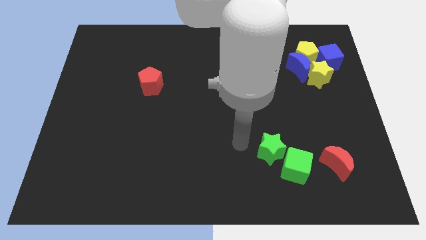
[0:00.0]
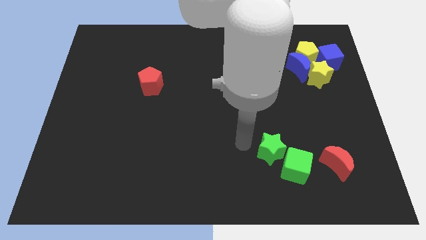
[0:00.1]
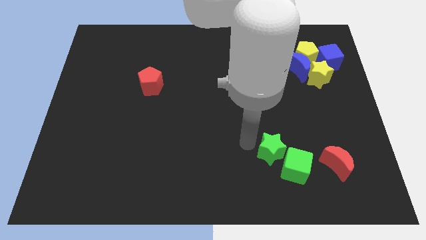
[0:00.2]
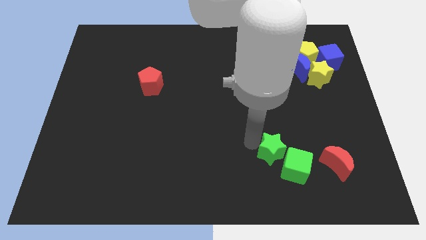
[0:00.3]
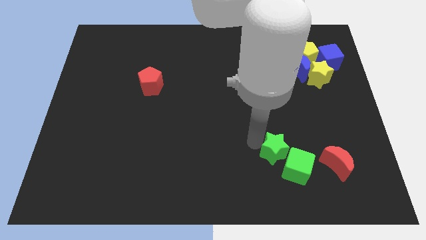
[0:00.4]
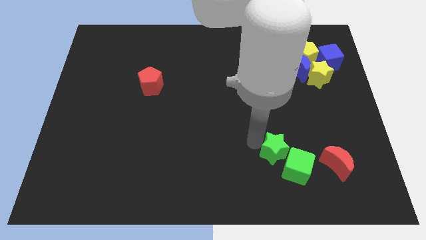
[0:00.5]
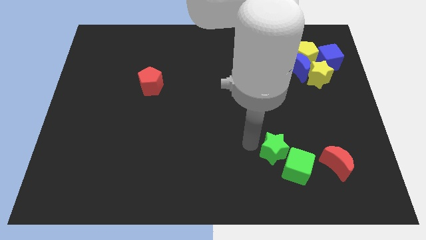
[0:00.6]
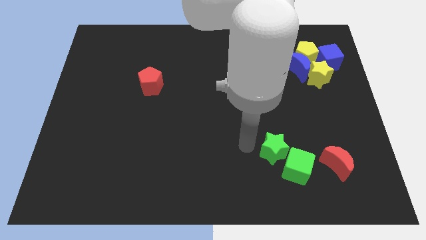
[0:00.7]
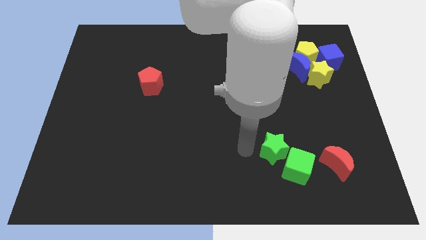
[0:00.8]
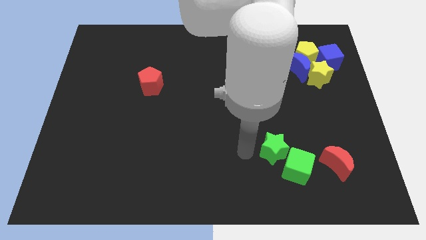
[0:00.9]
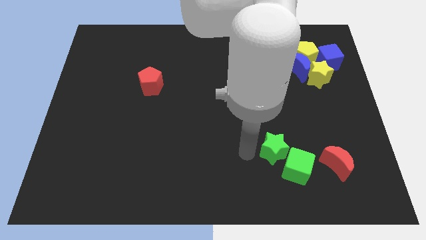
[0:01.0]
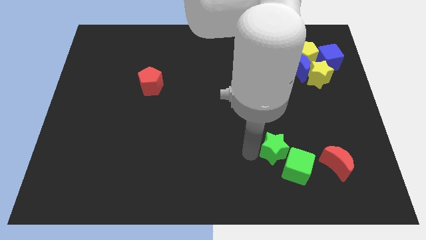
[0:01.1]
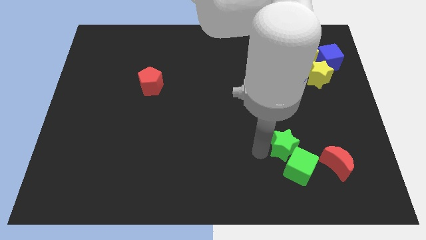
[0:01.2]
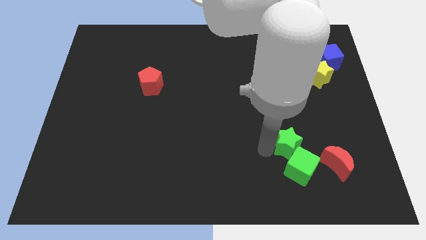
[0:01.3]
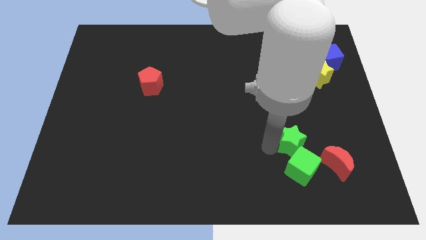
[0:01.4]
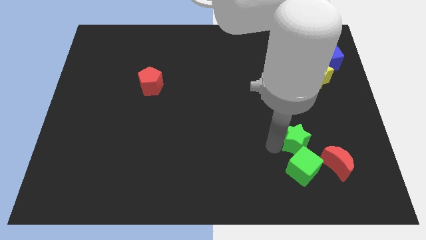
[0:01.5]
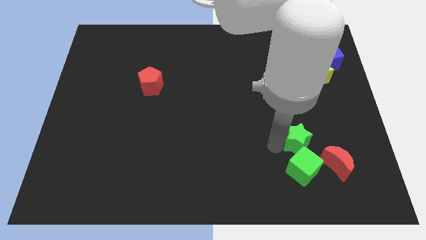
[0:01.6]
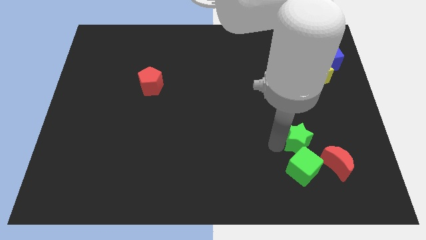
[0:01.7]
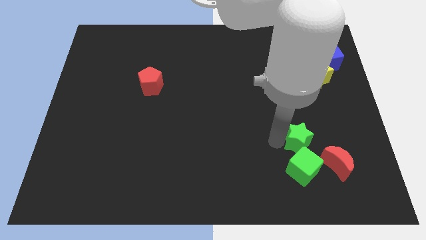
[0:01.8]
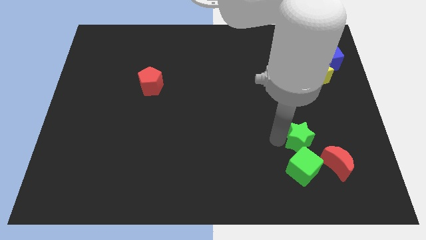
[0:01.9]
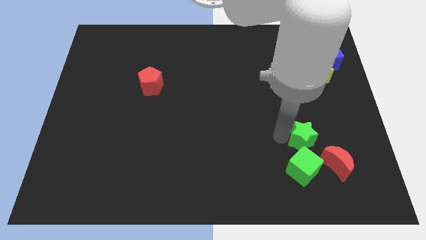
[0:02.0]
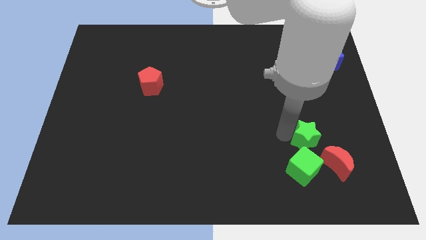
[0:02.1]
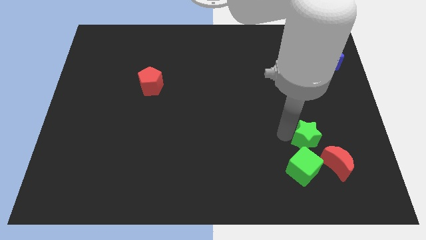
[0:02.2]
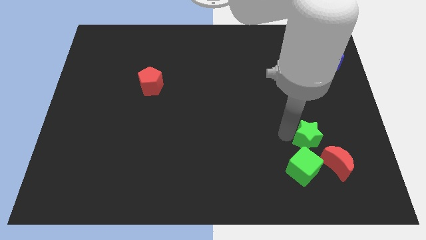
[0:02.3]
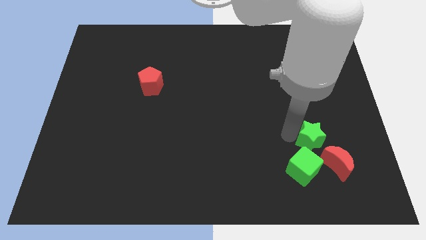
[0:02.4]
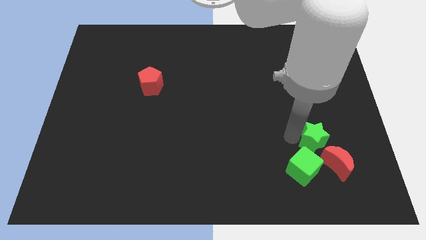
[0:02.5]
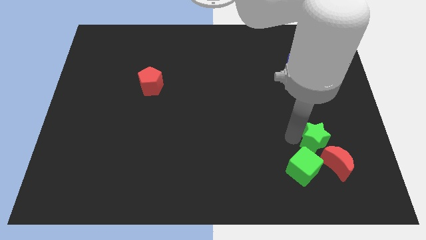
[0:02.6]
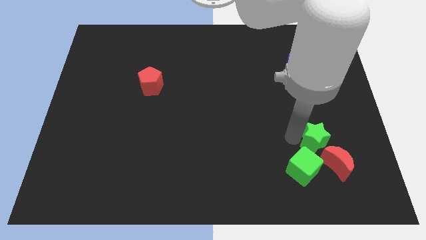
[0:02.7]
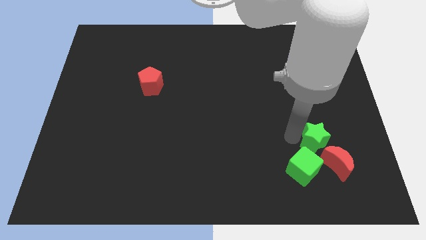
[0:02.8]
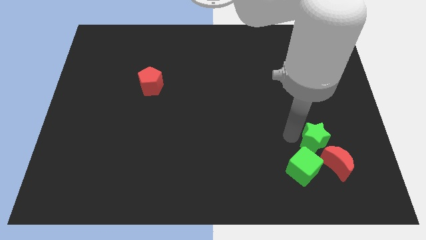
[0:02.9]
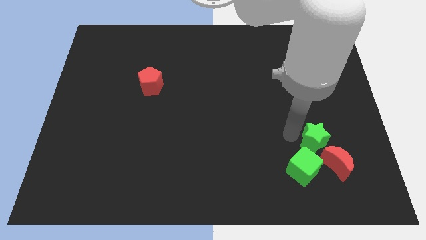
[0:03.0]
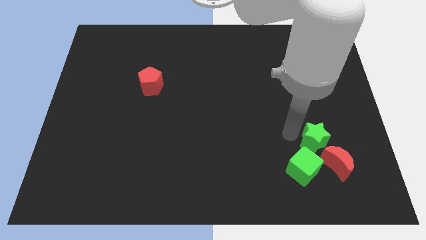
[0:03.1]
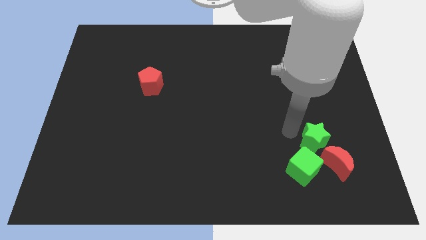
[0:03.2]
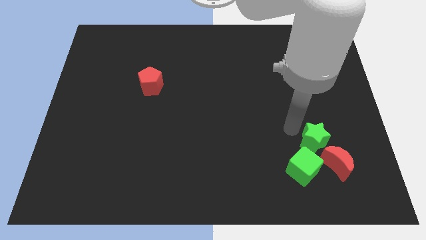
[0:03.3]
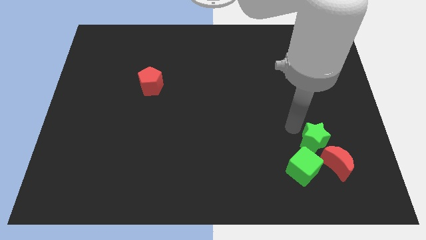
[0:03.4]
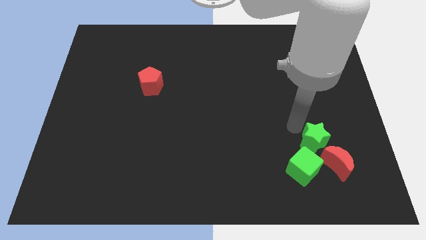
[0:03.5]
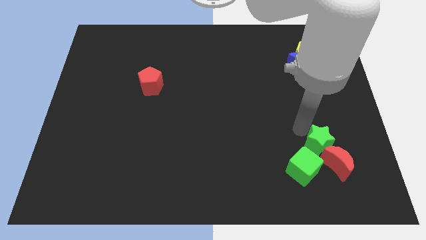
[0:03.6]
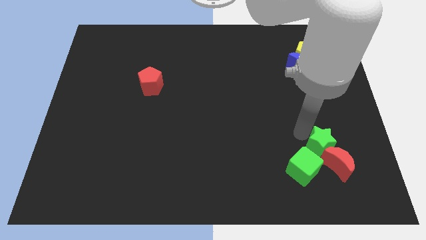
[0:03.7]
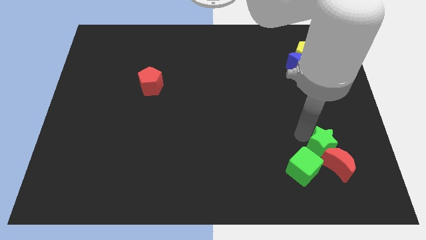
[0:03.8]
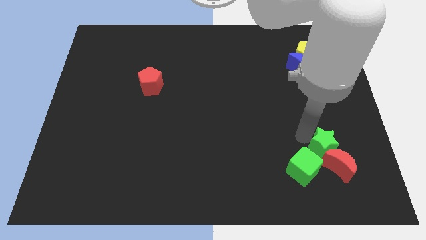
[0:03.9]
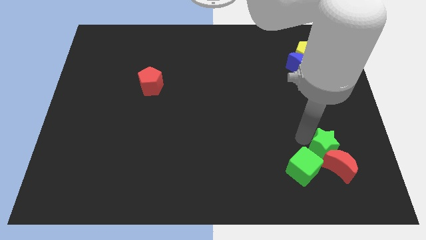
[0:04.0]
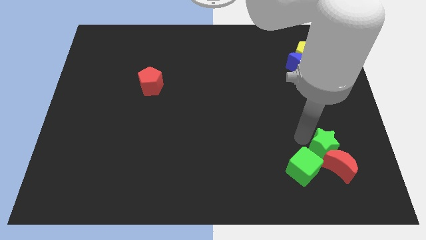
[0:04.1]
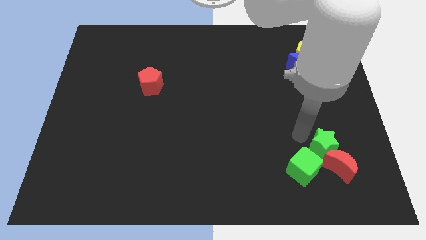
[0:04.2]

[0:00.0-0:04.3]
move the green star to the top of the red crescent

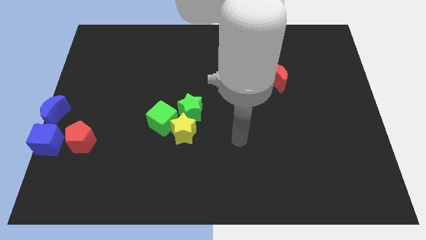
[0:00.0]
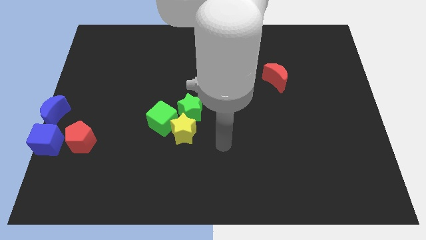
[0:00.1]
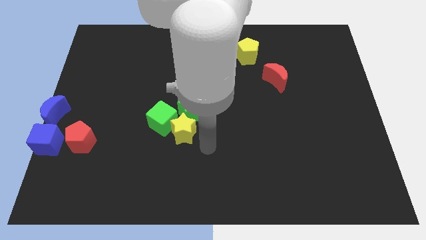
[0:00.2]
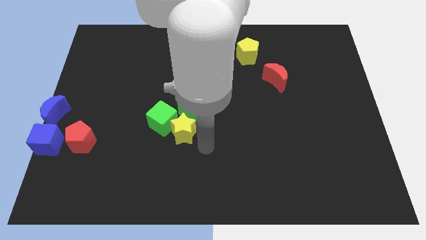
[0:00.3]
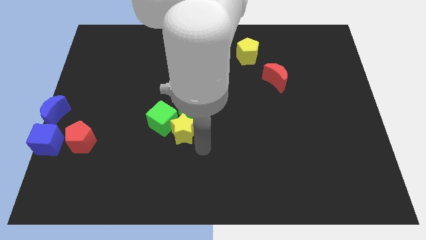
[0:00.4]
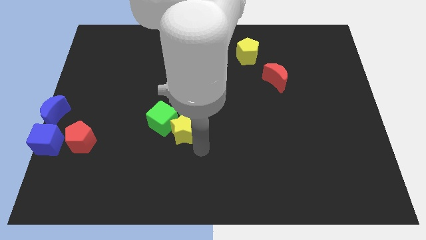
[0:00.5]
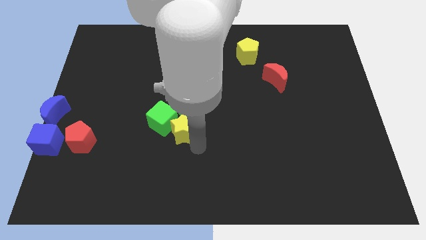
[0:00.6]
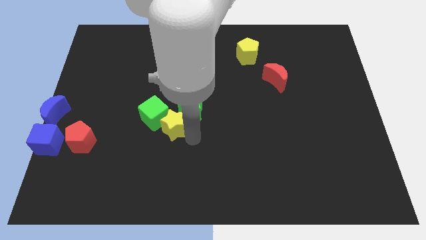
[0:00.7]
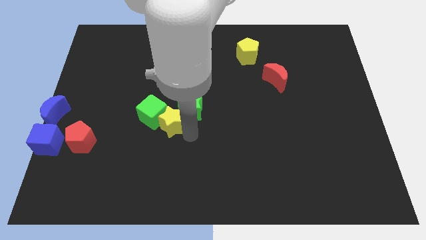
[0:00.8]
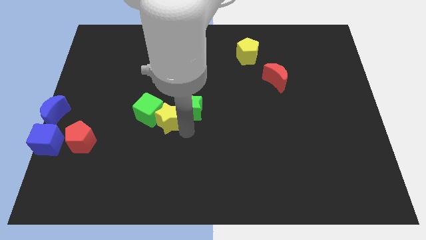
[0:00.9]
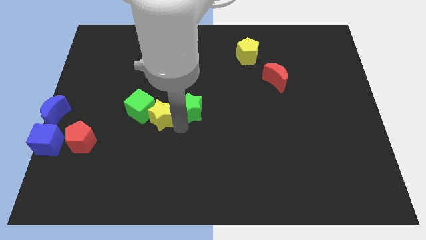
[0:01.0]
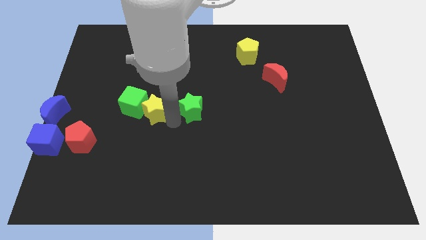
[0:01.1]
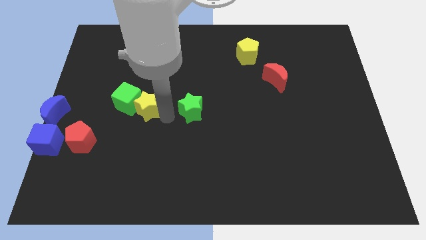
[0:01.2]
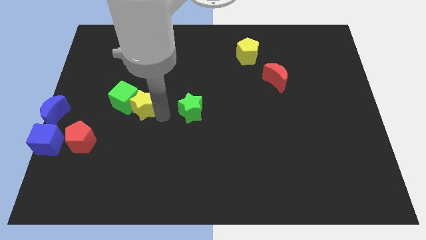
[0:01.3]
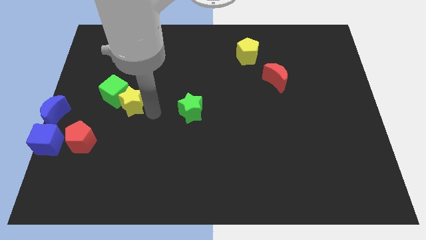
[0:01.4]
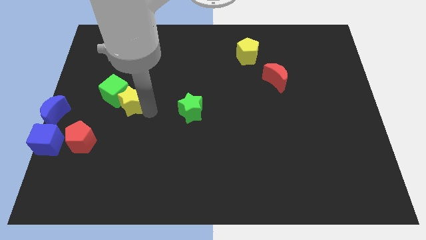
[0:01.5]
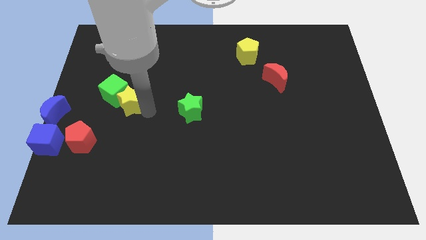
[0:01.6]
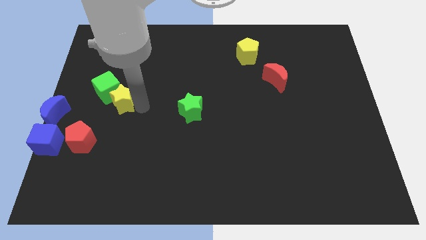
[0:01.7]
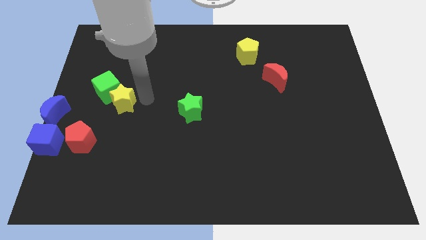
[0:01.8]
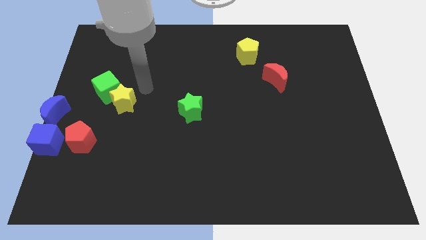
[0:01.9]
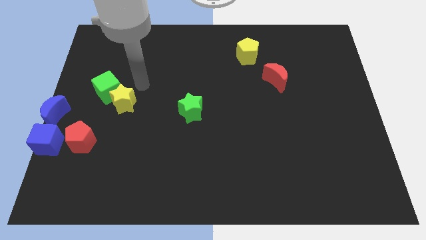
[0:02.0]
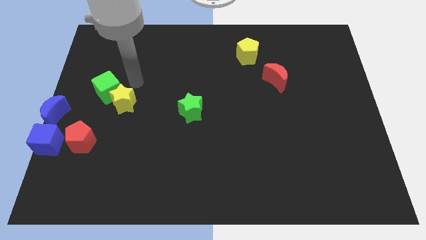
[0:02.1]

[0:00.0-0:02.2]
move the yellow star and the green cube away from the green star

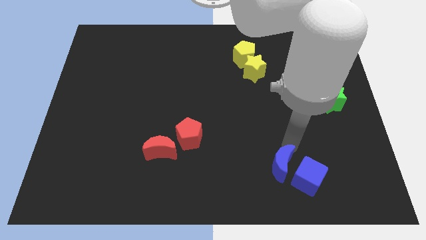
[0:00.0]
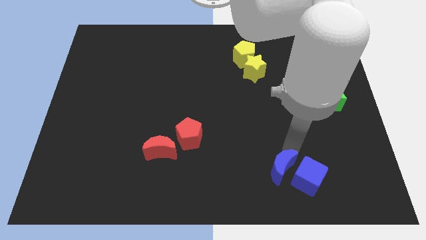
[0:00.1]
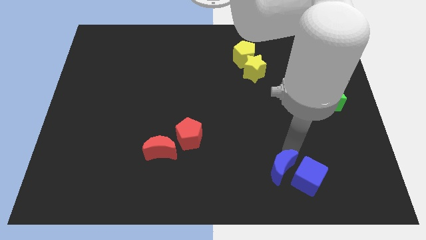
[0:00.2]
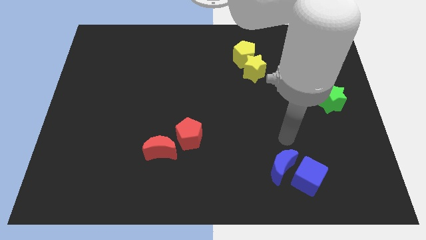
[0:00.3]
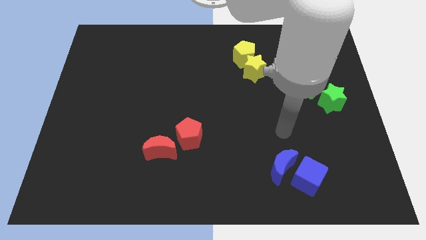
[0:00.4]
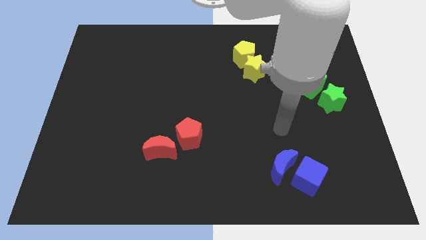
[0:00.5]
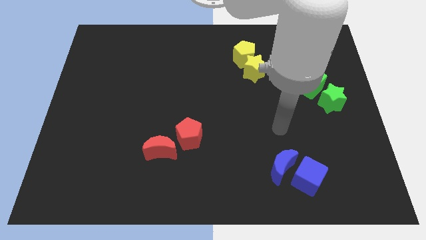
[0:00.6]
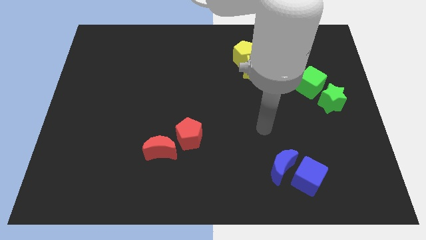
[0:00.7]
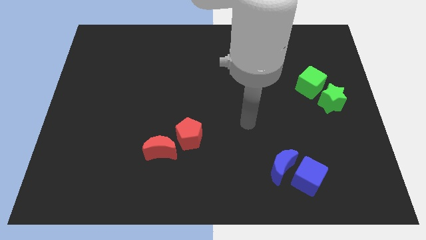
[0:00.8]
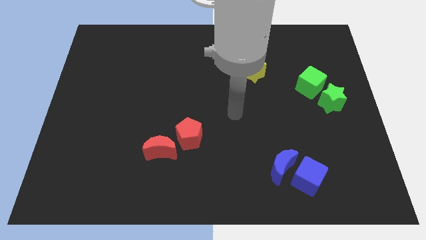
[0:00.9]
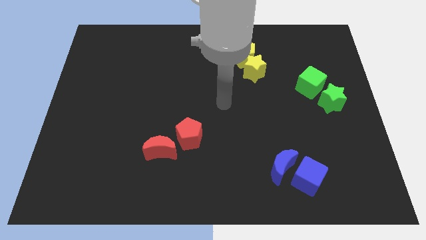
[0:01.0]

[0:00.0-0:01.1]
drag the pointer towards the center of the board

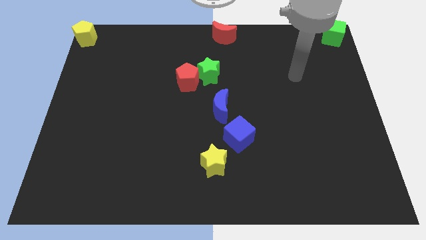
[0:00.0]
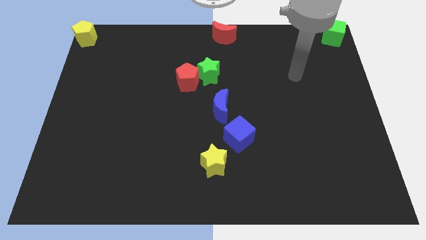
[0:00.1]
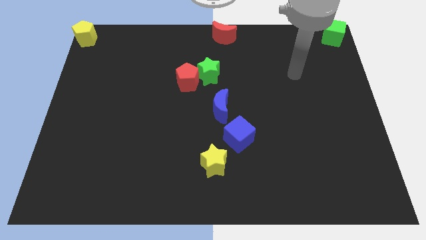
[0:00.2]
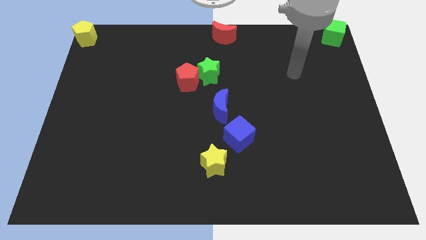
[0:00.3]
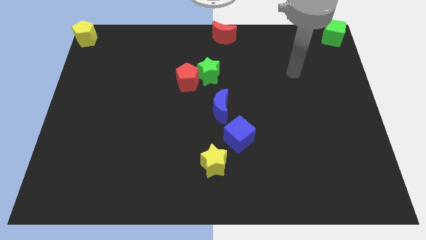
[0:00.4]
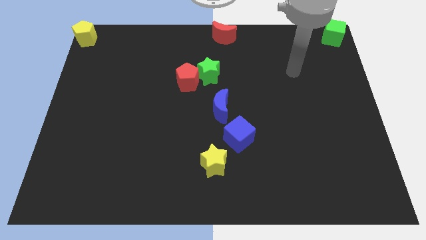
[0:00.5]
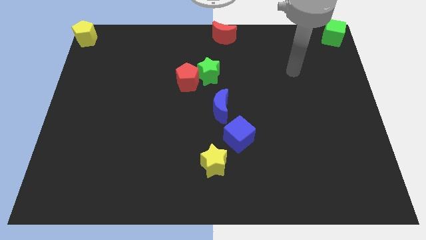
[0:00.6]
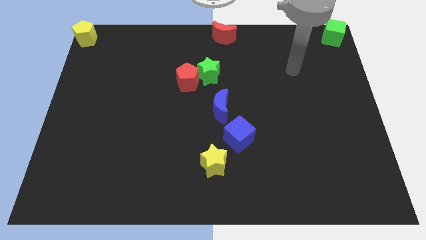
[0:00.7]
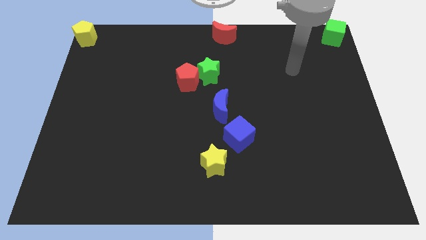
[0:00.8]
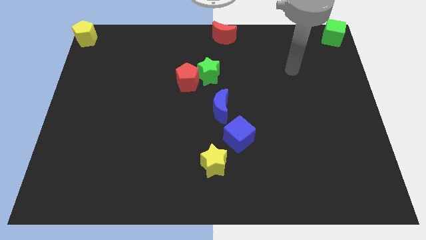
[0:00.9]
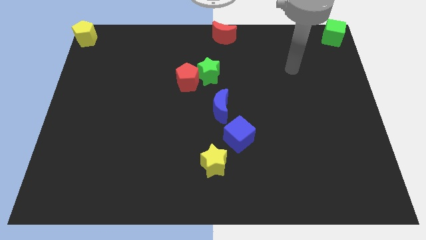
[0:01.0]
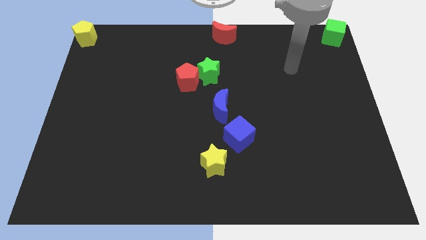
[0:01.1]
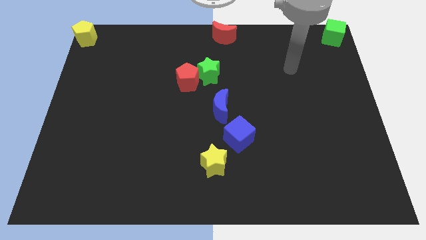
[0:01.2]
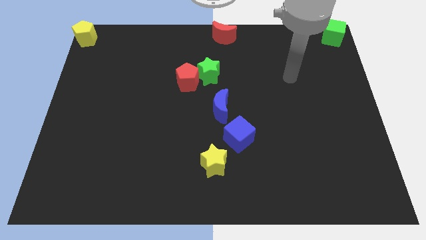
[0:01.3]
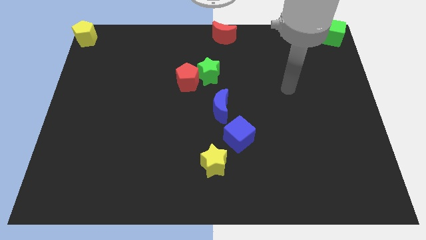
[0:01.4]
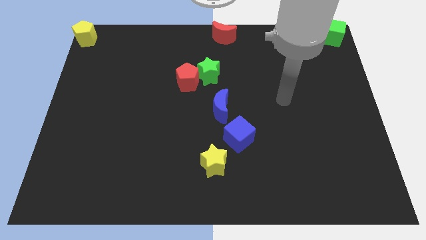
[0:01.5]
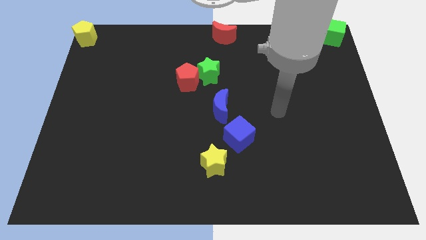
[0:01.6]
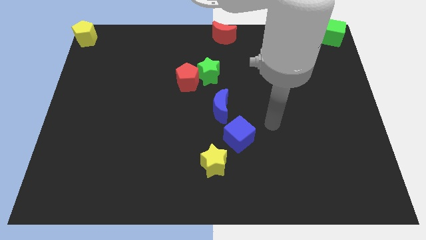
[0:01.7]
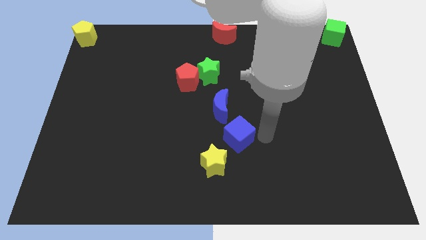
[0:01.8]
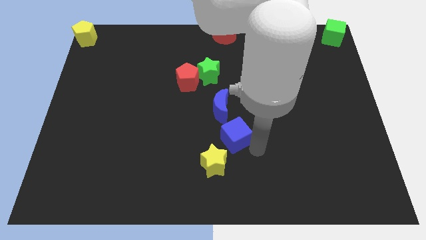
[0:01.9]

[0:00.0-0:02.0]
move your arm right to the blue cube
